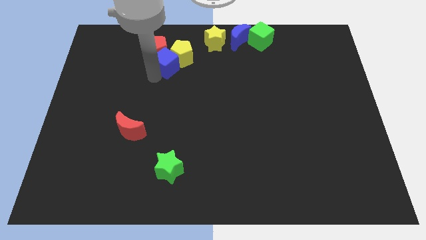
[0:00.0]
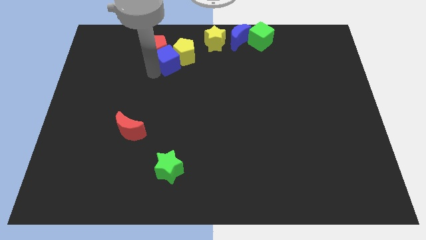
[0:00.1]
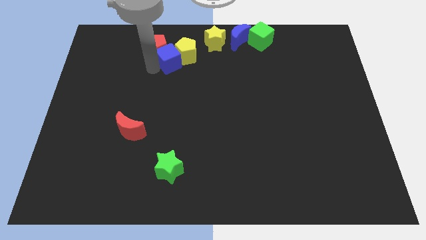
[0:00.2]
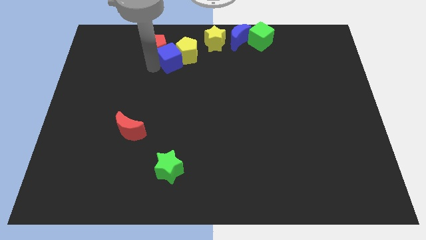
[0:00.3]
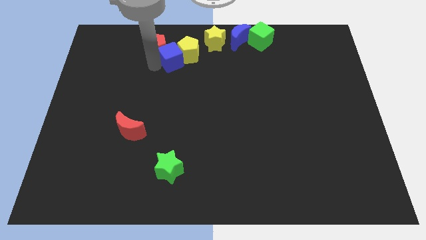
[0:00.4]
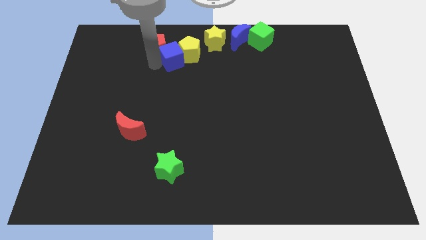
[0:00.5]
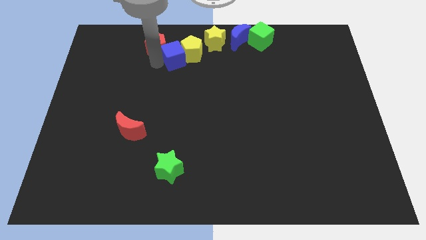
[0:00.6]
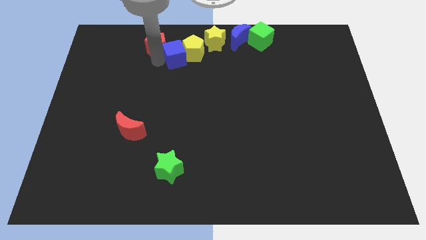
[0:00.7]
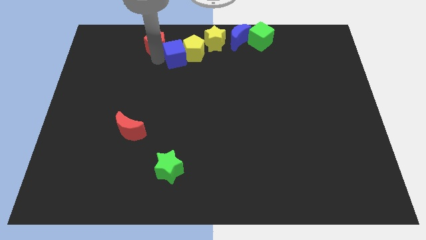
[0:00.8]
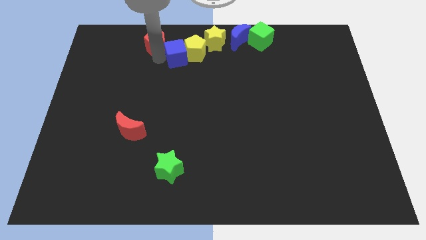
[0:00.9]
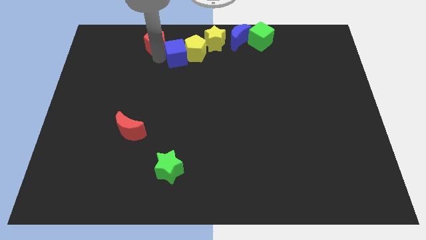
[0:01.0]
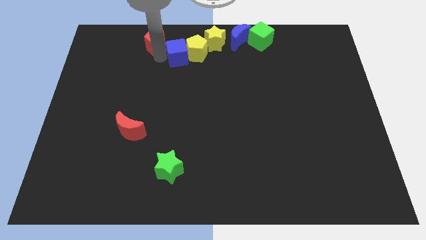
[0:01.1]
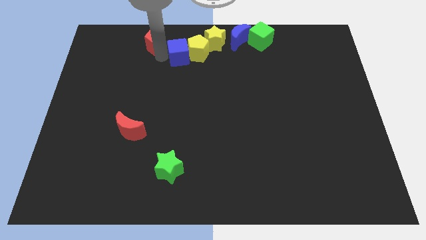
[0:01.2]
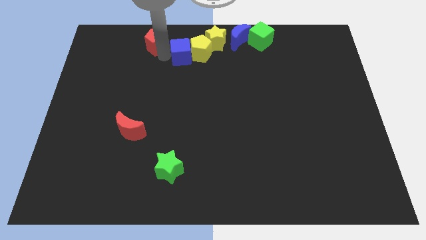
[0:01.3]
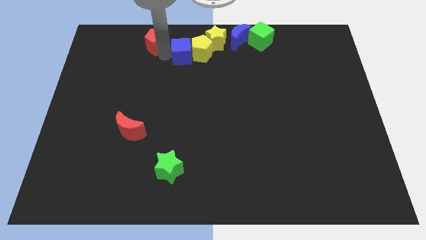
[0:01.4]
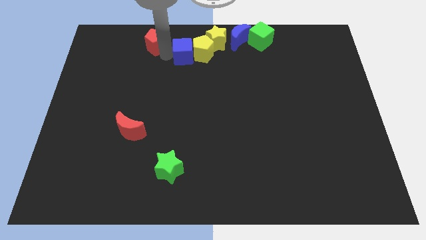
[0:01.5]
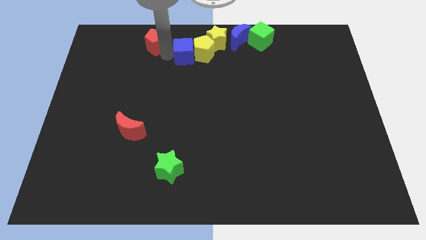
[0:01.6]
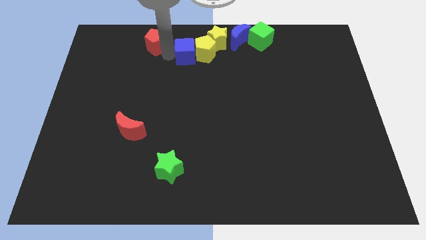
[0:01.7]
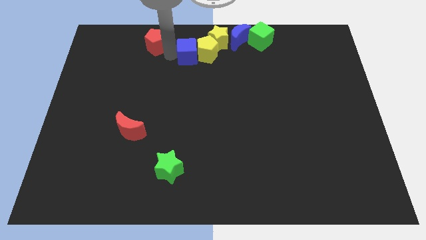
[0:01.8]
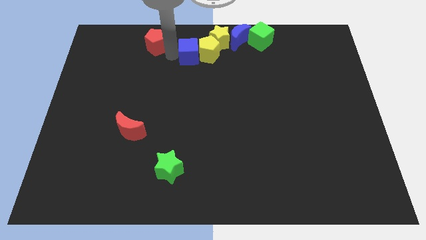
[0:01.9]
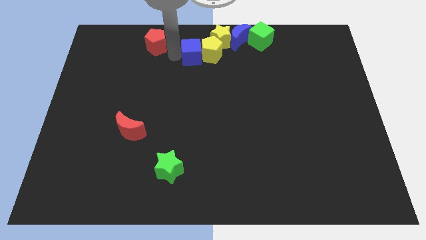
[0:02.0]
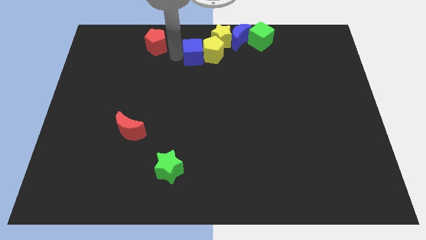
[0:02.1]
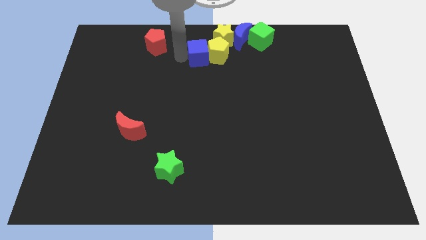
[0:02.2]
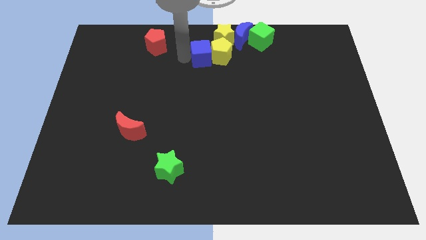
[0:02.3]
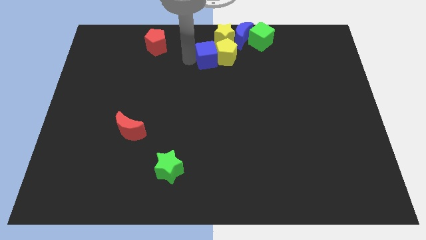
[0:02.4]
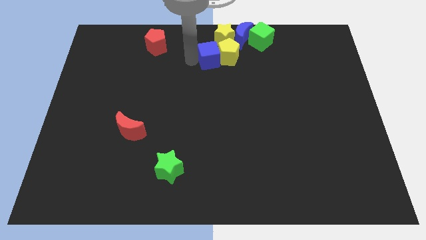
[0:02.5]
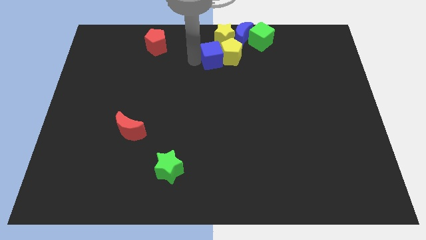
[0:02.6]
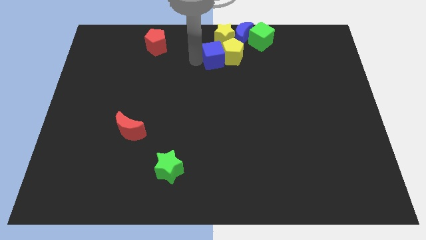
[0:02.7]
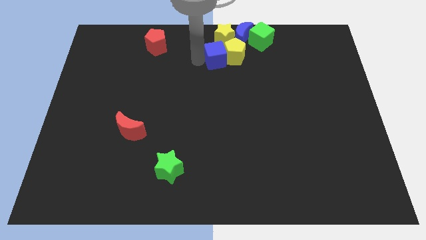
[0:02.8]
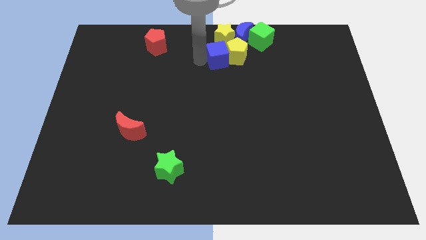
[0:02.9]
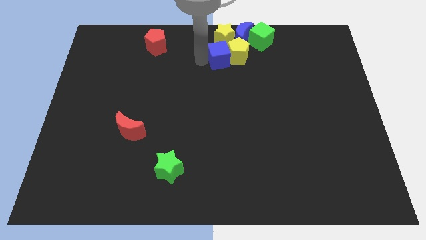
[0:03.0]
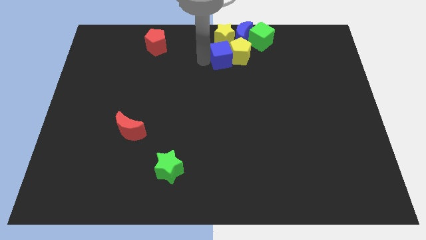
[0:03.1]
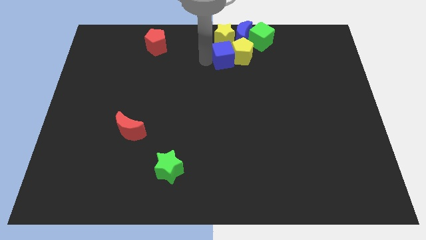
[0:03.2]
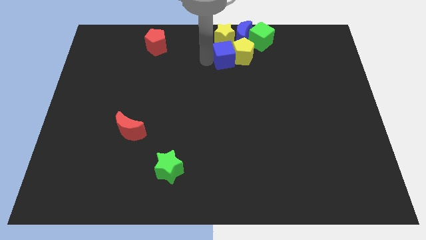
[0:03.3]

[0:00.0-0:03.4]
push the blue cube along with yellow pentagon to the bottom of the yellow star

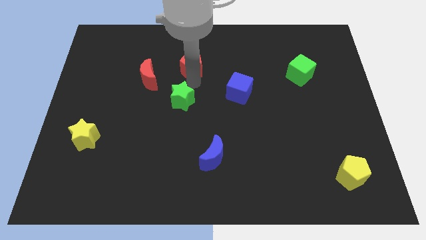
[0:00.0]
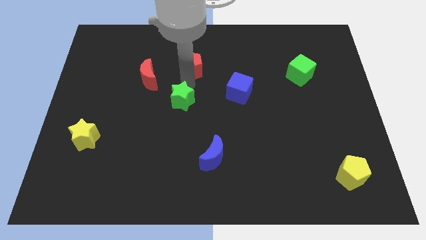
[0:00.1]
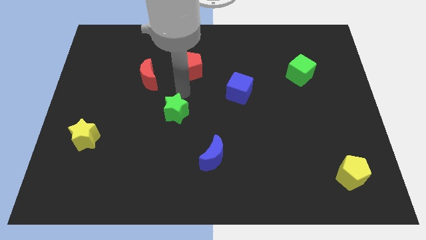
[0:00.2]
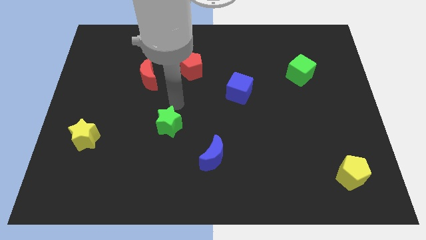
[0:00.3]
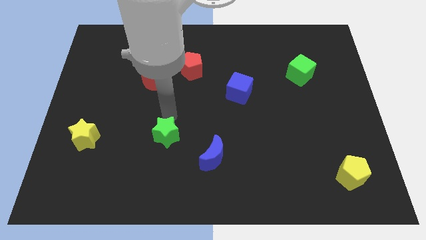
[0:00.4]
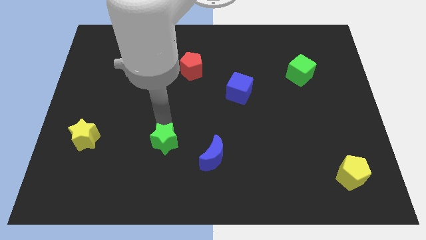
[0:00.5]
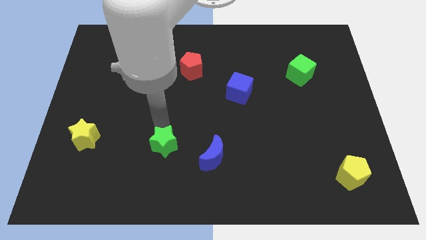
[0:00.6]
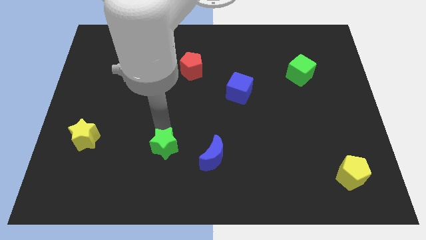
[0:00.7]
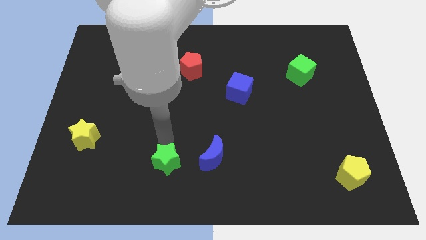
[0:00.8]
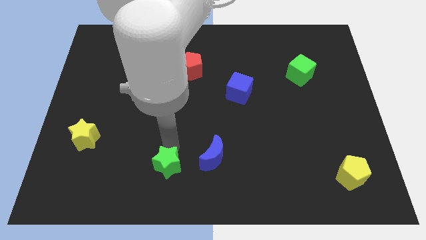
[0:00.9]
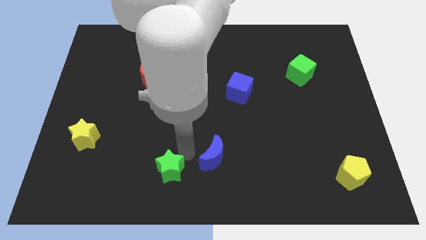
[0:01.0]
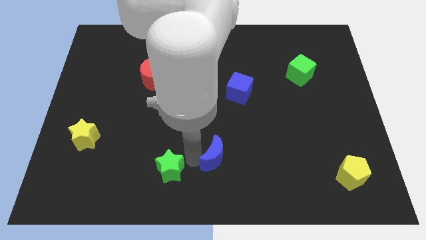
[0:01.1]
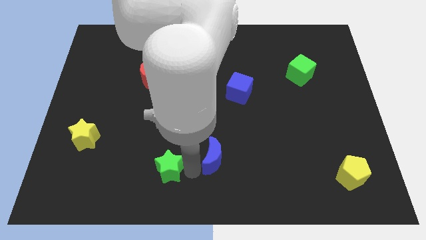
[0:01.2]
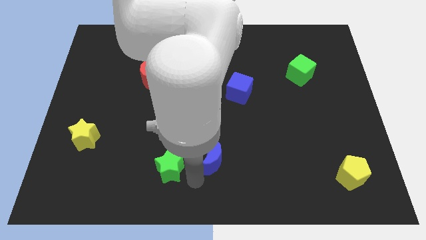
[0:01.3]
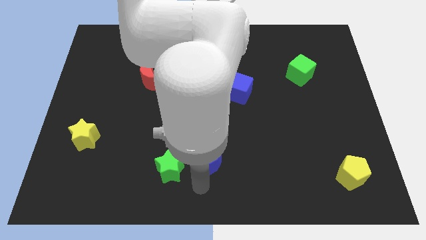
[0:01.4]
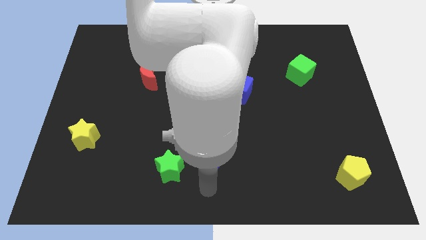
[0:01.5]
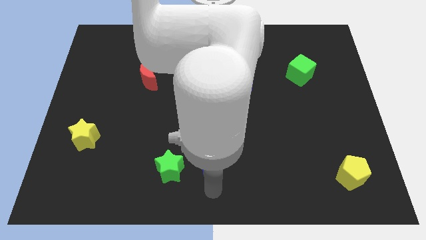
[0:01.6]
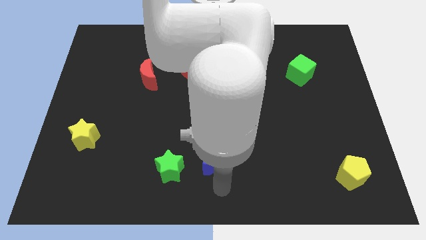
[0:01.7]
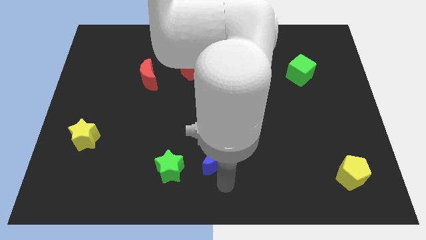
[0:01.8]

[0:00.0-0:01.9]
push green star parallel to blue moon

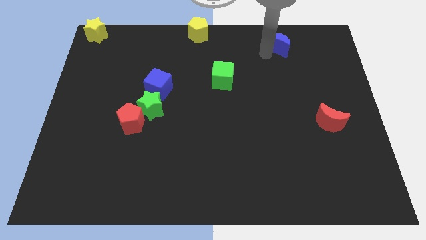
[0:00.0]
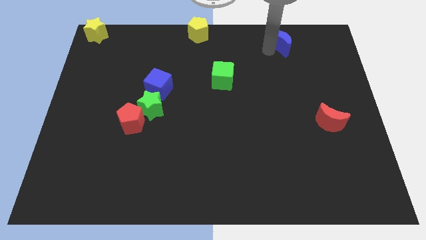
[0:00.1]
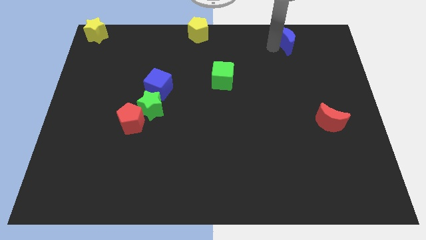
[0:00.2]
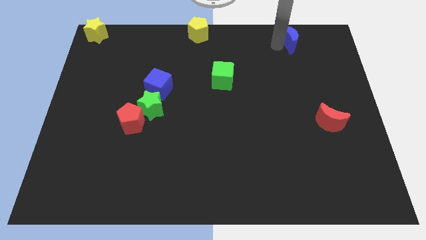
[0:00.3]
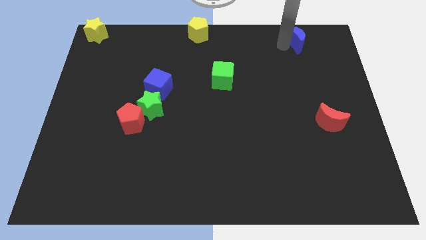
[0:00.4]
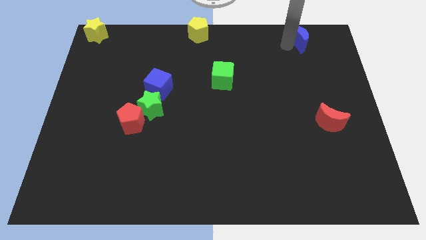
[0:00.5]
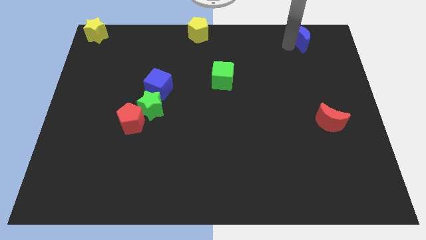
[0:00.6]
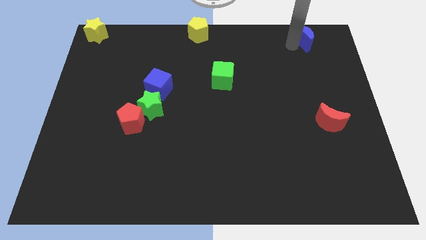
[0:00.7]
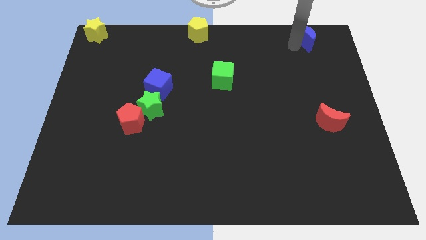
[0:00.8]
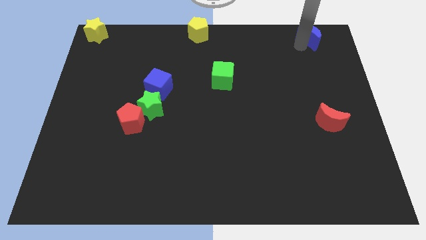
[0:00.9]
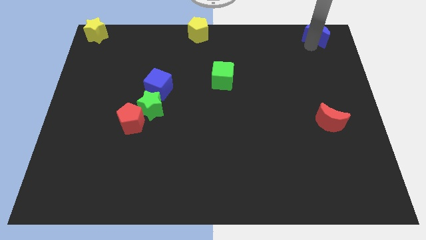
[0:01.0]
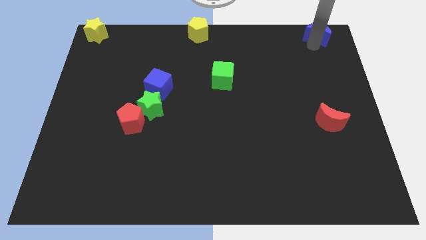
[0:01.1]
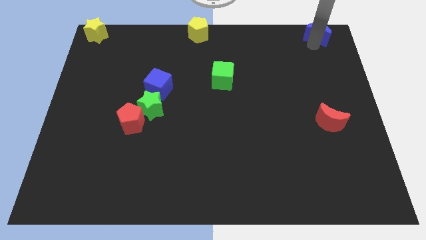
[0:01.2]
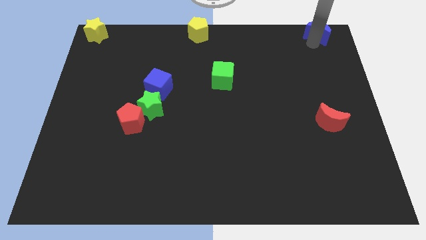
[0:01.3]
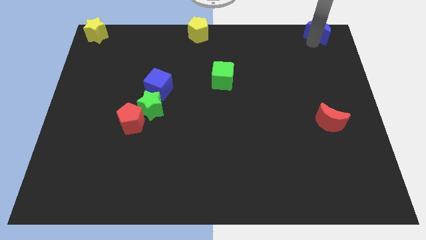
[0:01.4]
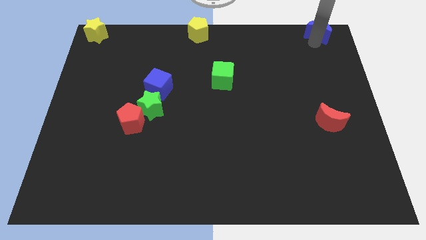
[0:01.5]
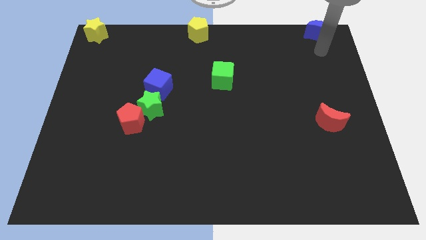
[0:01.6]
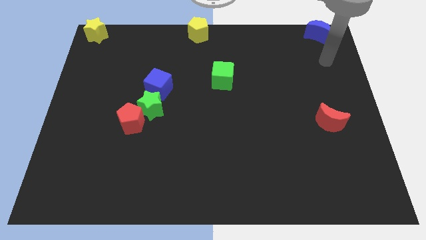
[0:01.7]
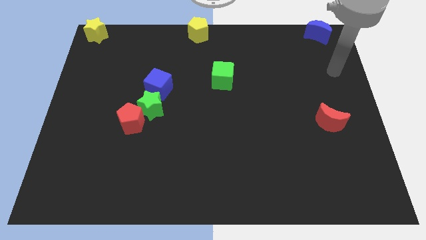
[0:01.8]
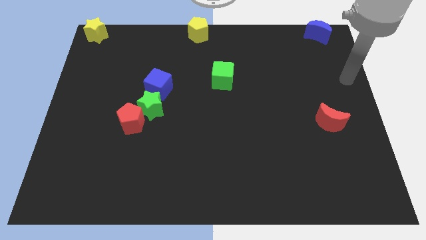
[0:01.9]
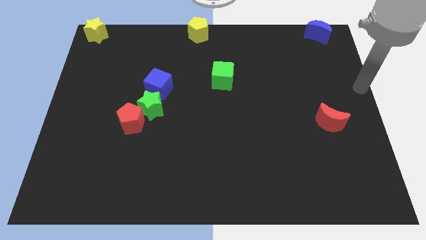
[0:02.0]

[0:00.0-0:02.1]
place blue moon to the top right corner of the board

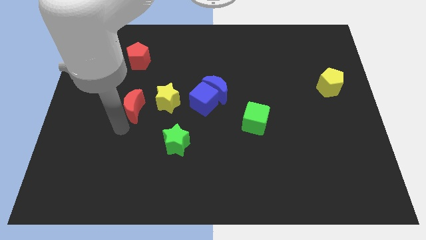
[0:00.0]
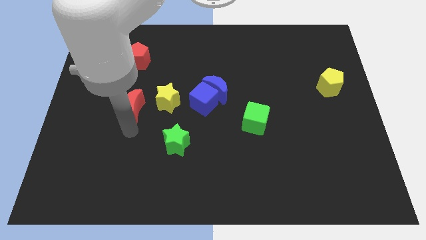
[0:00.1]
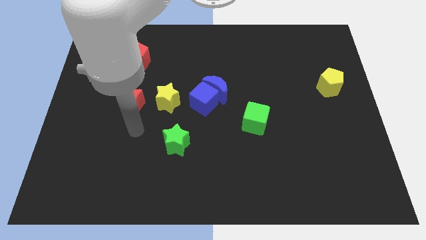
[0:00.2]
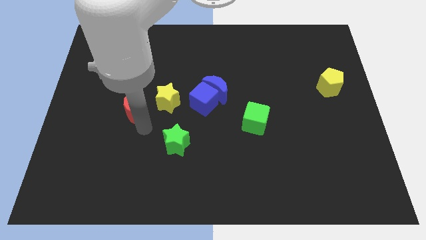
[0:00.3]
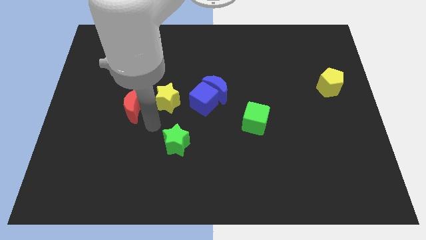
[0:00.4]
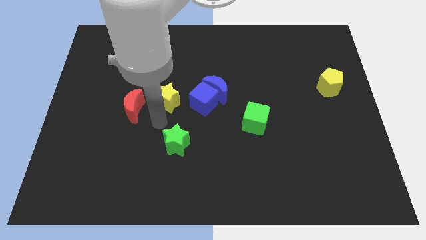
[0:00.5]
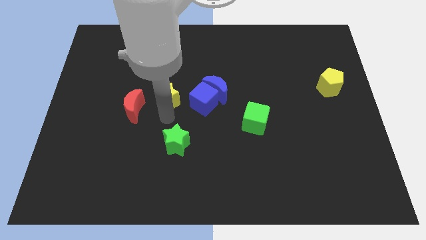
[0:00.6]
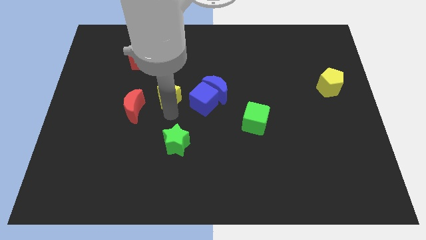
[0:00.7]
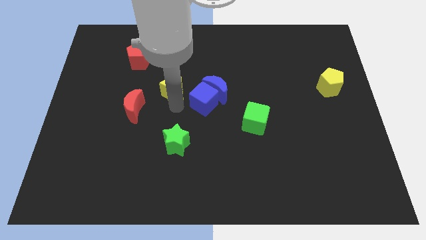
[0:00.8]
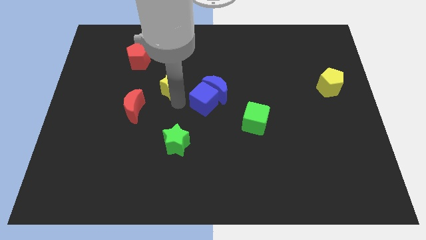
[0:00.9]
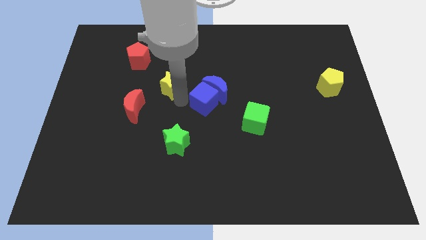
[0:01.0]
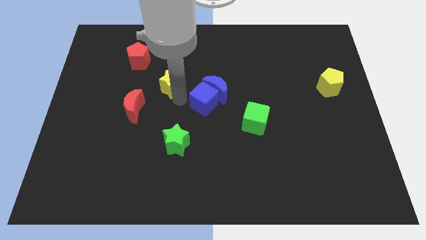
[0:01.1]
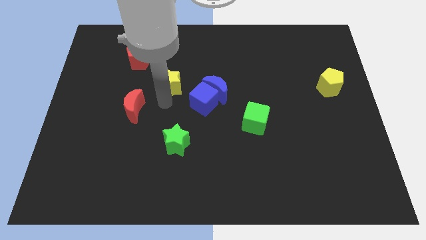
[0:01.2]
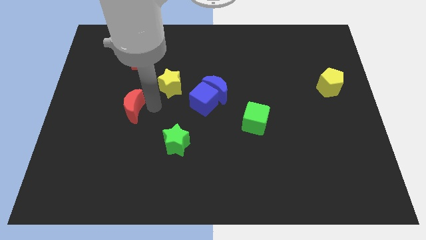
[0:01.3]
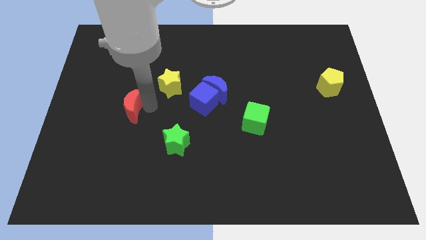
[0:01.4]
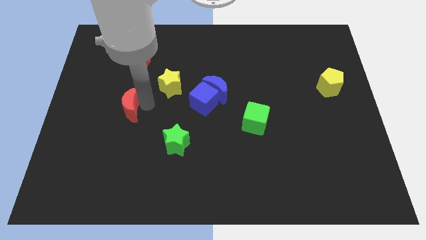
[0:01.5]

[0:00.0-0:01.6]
move the yellow star slightly upwards
